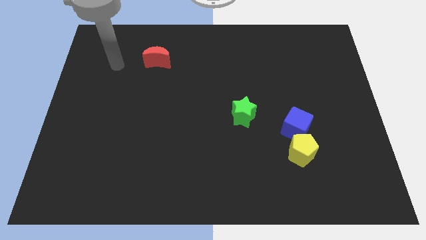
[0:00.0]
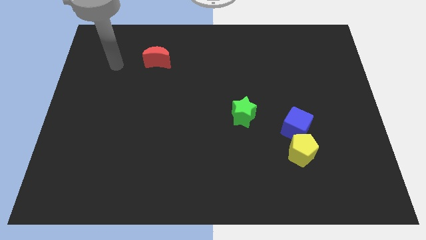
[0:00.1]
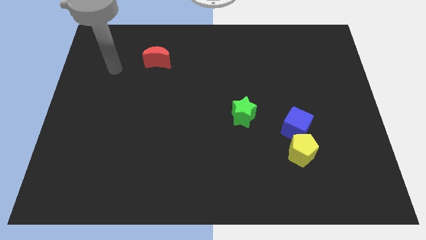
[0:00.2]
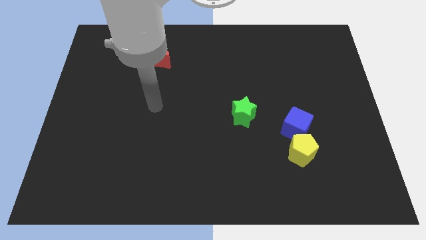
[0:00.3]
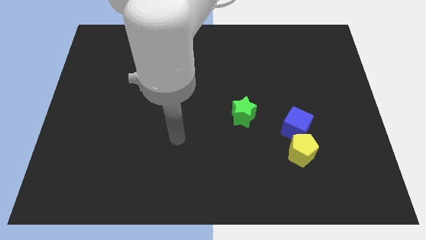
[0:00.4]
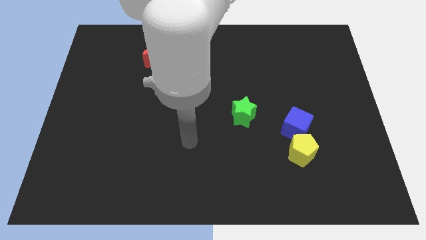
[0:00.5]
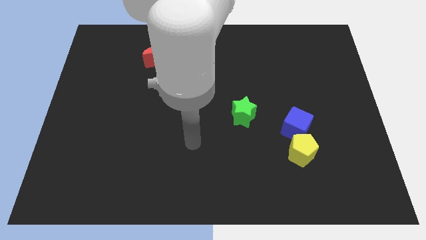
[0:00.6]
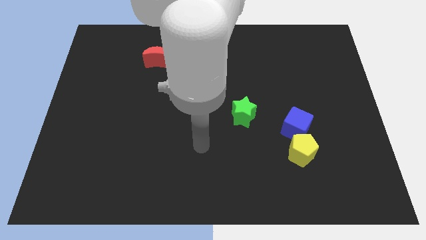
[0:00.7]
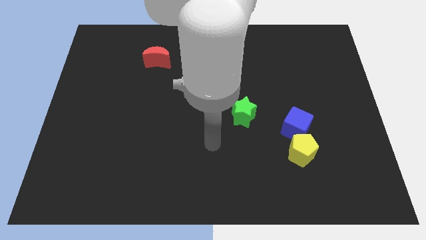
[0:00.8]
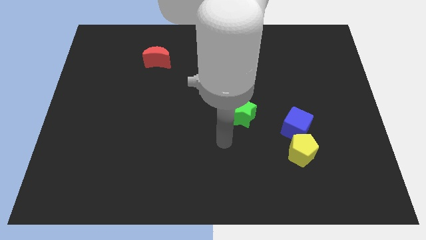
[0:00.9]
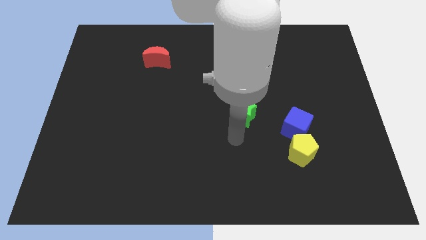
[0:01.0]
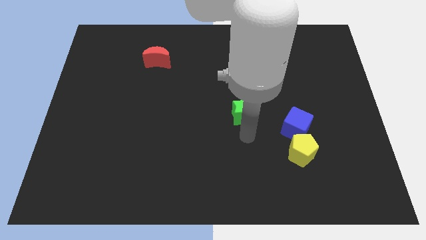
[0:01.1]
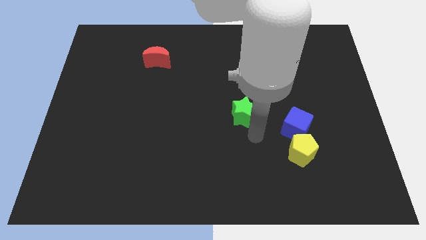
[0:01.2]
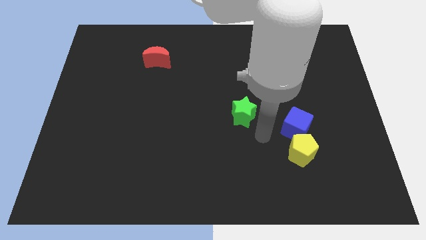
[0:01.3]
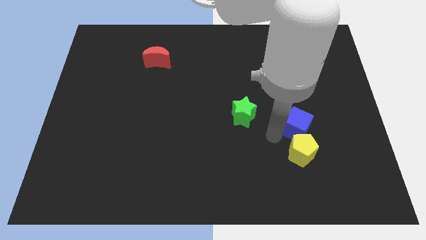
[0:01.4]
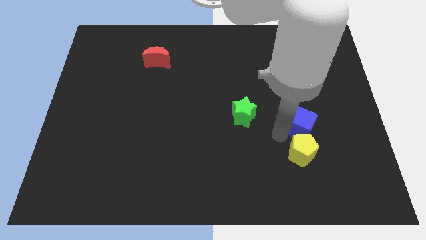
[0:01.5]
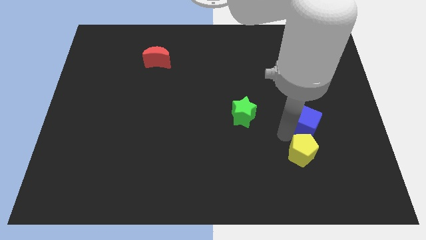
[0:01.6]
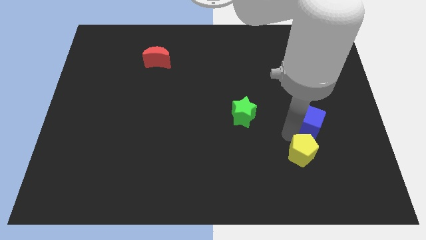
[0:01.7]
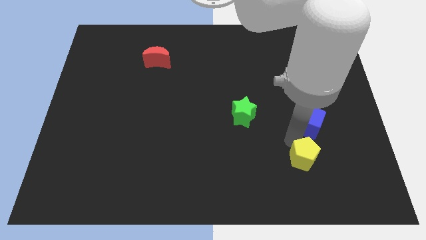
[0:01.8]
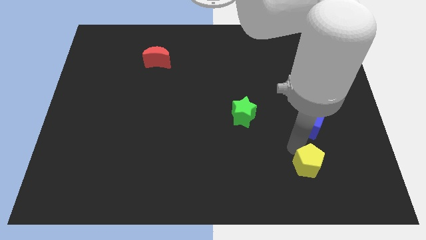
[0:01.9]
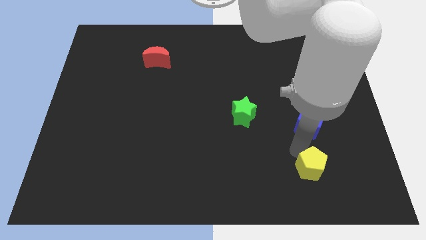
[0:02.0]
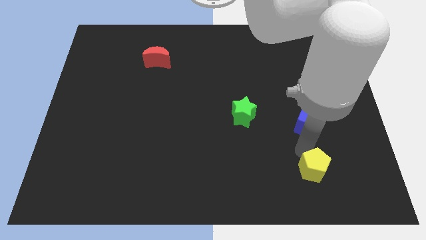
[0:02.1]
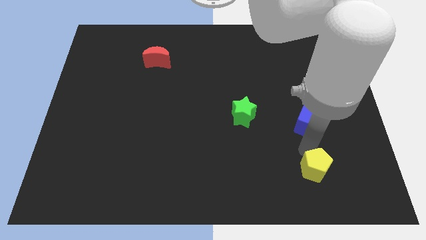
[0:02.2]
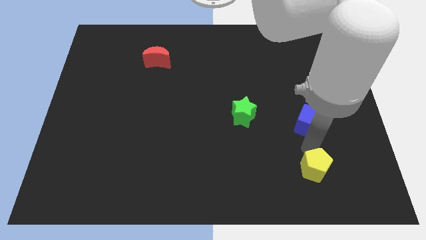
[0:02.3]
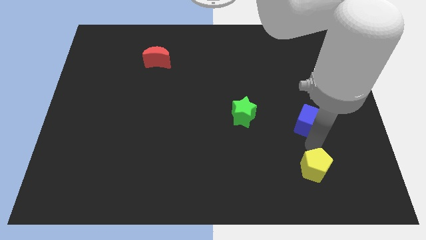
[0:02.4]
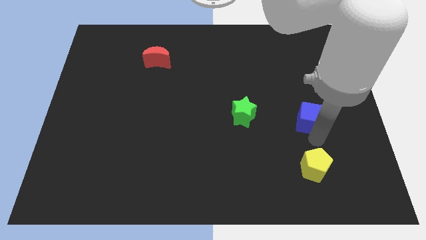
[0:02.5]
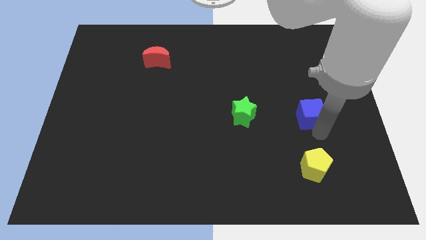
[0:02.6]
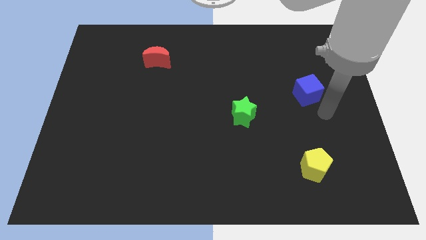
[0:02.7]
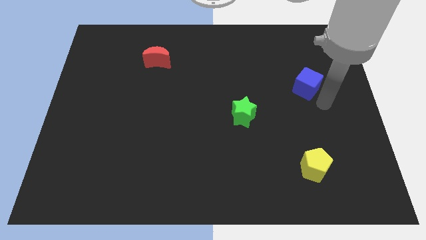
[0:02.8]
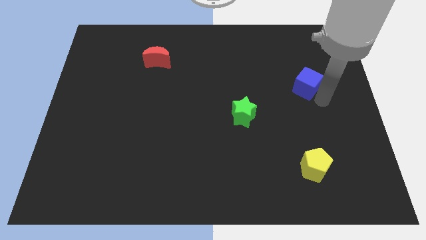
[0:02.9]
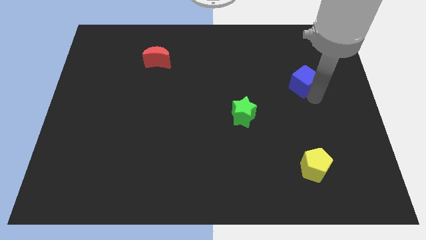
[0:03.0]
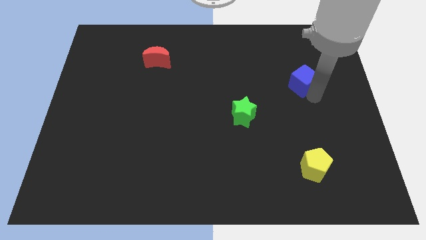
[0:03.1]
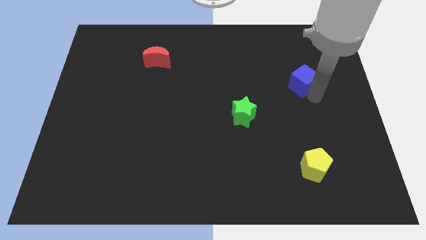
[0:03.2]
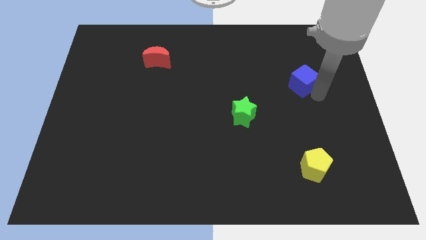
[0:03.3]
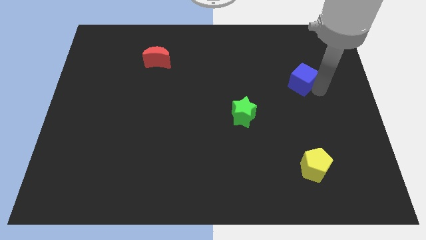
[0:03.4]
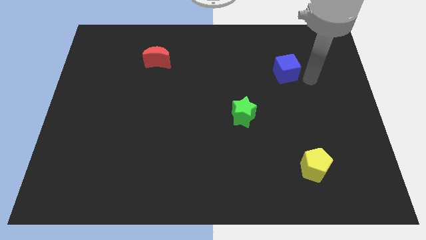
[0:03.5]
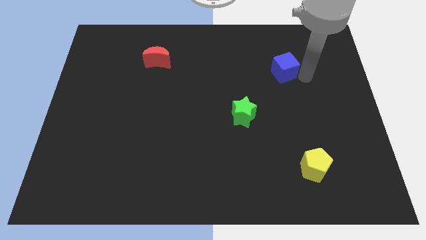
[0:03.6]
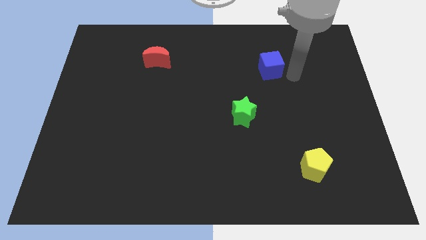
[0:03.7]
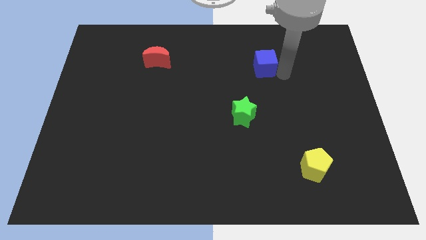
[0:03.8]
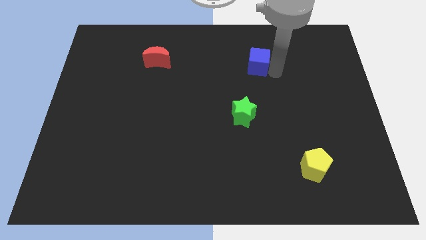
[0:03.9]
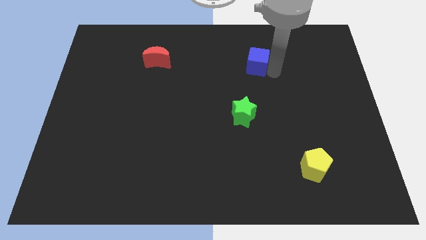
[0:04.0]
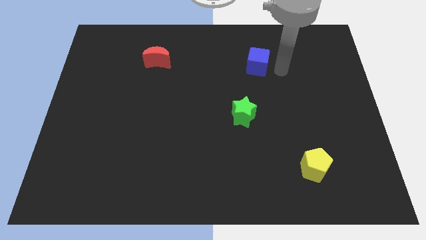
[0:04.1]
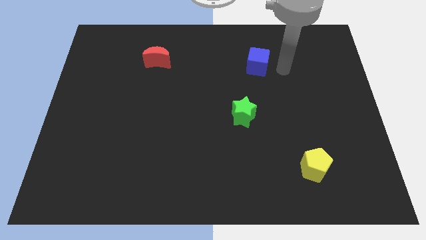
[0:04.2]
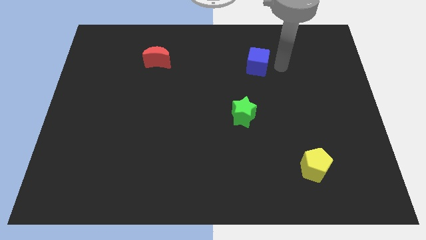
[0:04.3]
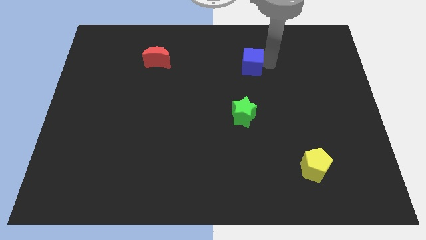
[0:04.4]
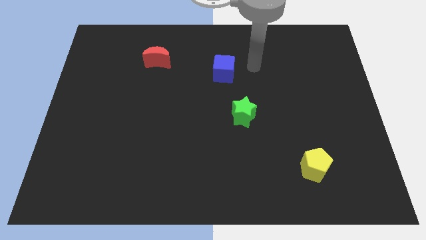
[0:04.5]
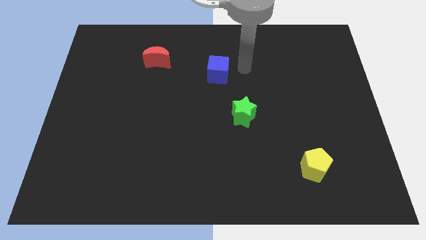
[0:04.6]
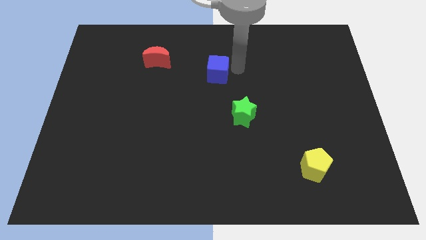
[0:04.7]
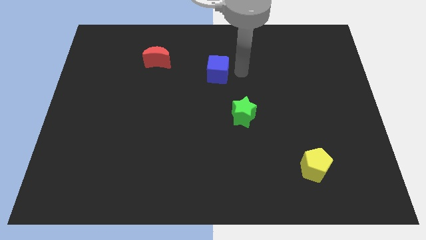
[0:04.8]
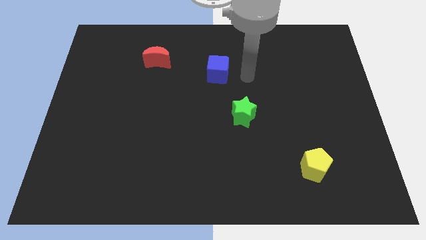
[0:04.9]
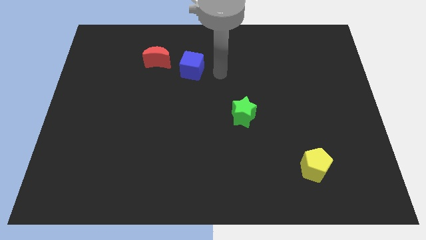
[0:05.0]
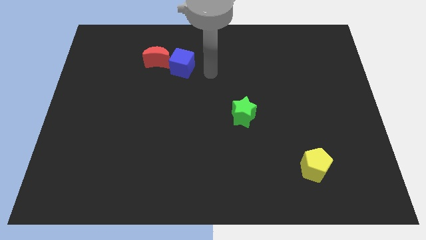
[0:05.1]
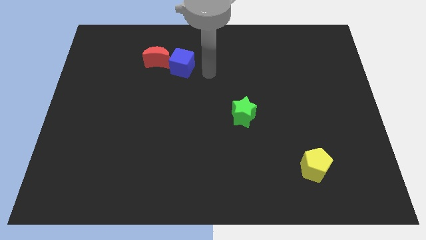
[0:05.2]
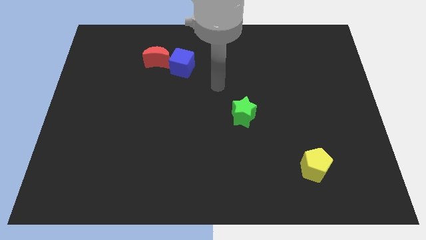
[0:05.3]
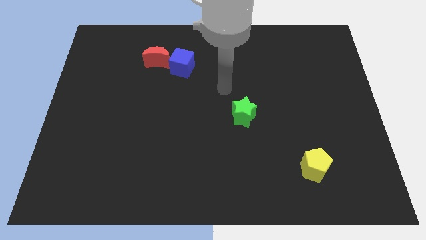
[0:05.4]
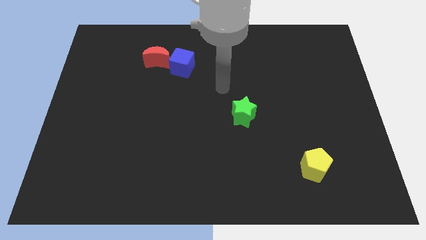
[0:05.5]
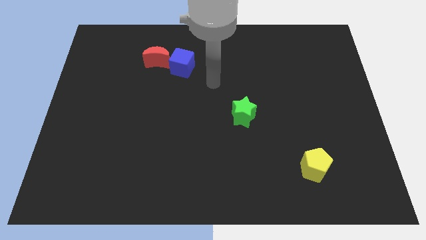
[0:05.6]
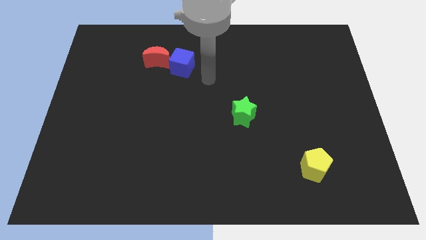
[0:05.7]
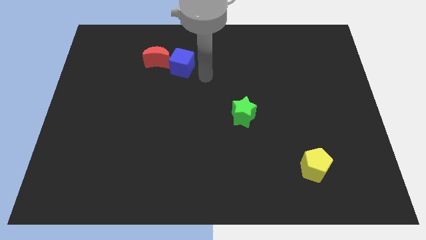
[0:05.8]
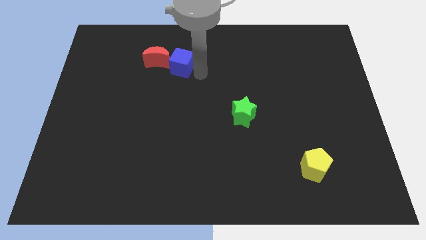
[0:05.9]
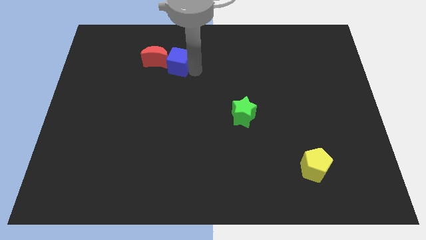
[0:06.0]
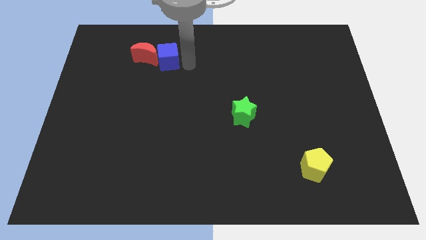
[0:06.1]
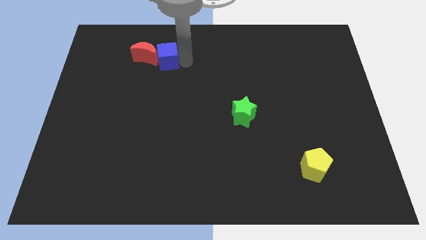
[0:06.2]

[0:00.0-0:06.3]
push the cube close to the red block

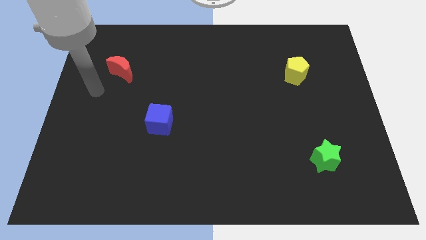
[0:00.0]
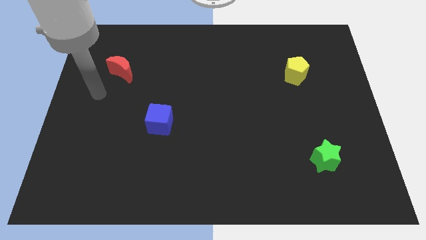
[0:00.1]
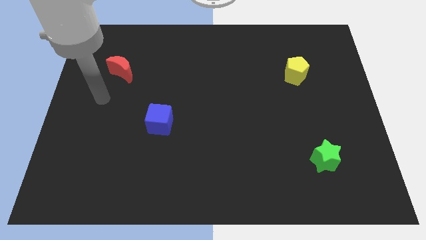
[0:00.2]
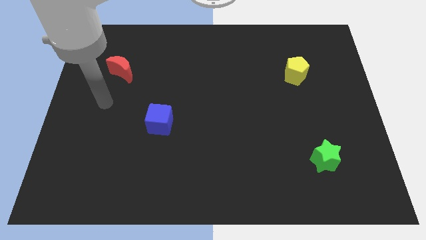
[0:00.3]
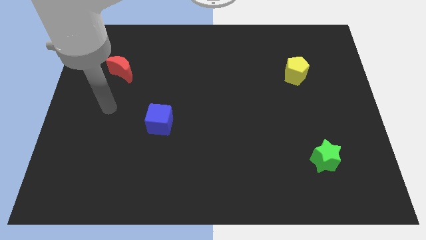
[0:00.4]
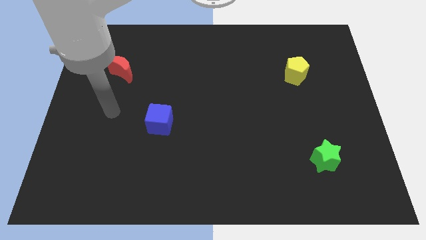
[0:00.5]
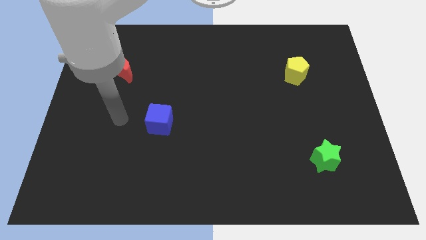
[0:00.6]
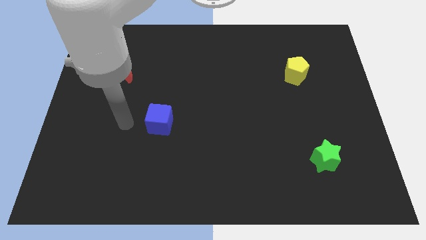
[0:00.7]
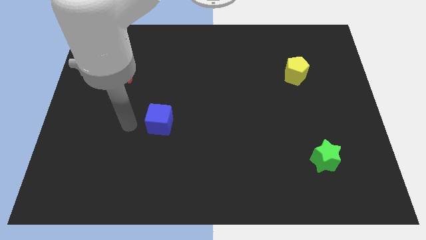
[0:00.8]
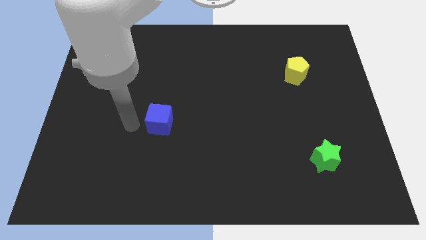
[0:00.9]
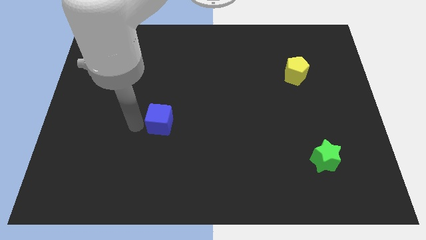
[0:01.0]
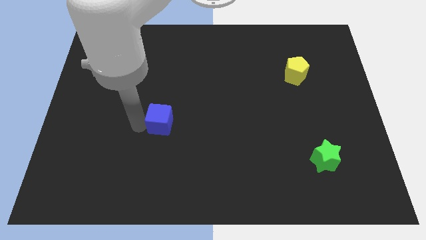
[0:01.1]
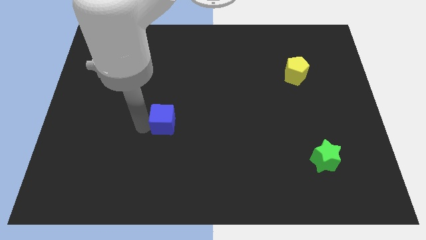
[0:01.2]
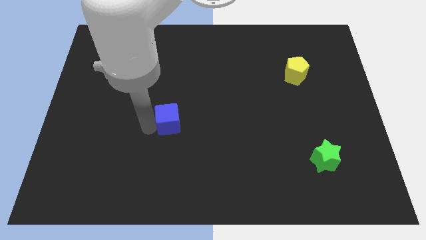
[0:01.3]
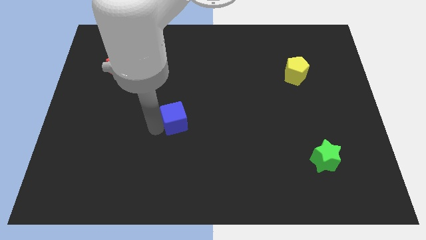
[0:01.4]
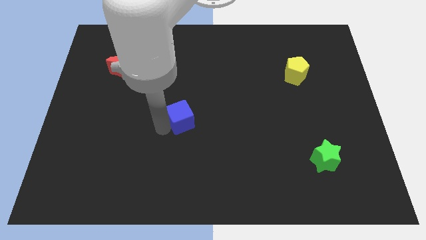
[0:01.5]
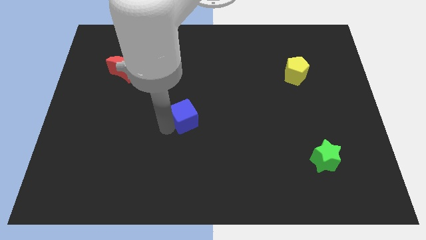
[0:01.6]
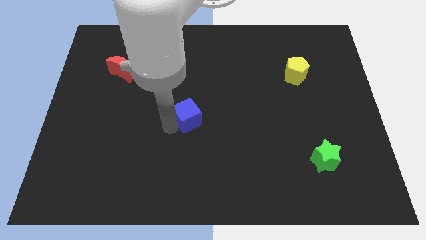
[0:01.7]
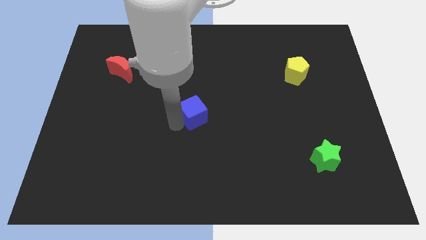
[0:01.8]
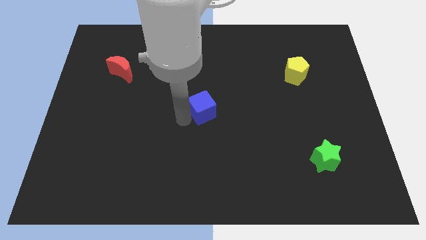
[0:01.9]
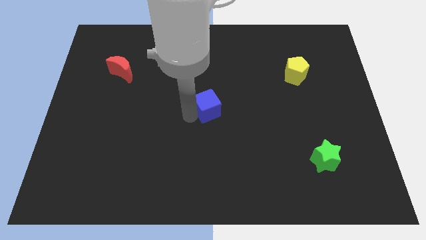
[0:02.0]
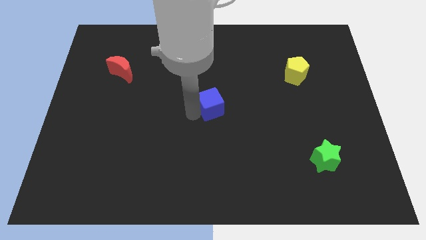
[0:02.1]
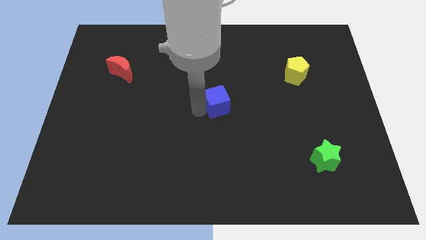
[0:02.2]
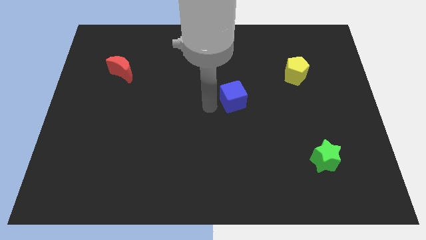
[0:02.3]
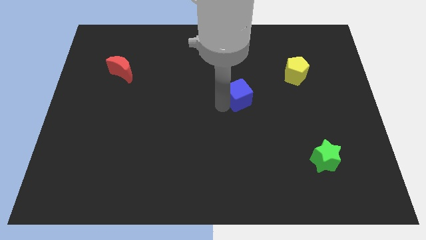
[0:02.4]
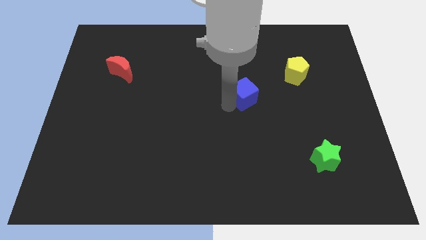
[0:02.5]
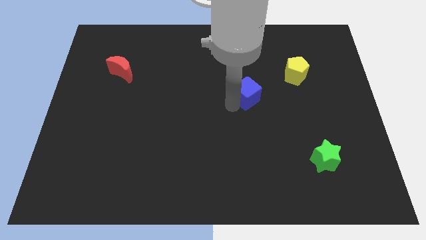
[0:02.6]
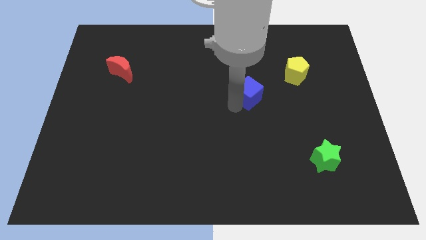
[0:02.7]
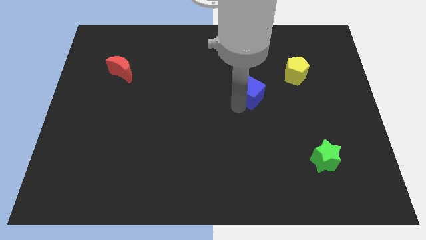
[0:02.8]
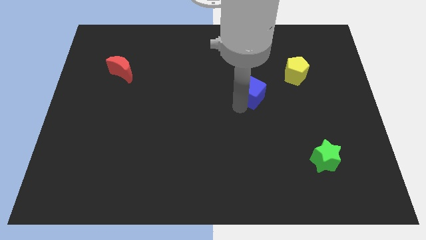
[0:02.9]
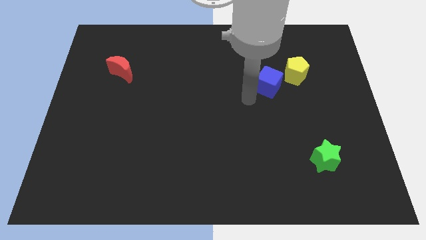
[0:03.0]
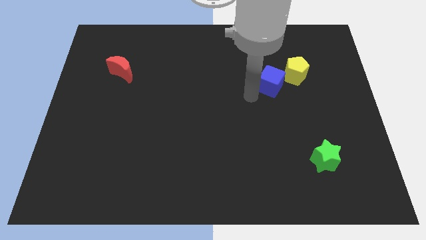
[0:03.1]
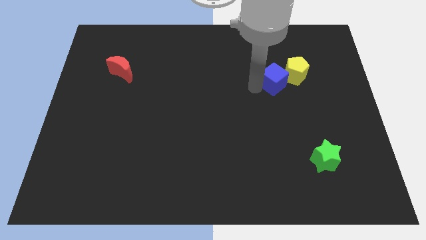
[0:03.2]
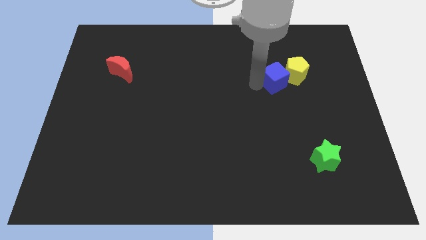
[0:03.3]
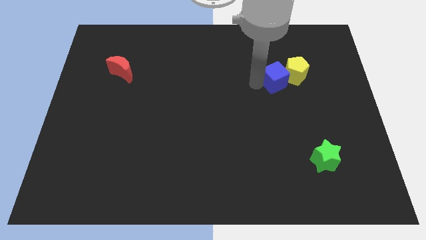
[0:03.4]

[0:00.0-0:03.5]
push the blue cube next to the yellow pentagon
